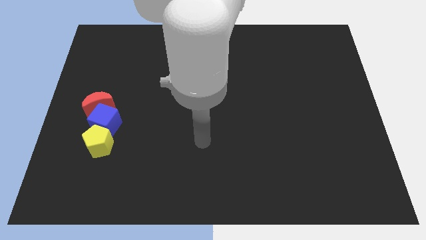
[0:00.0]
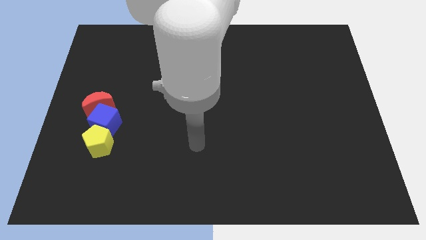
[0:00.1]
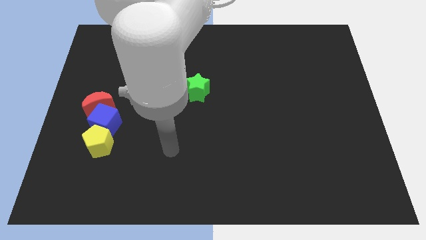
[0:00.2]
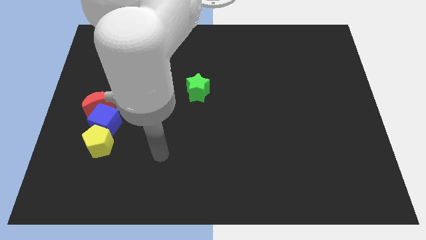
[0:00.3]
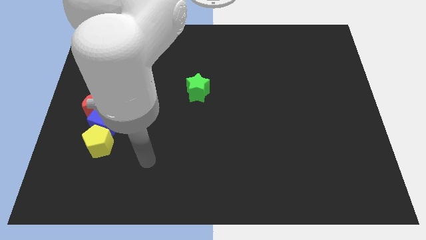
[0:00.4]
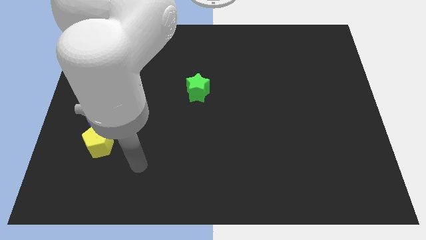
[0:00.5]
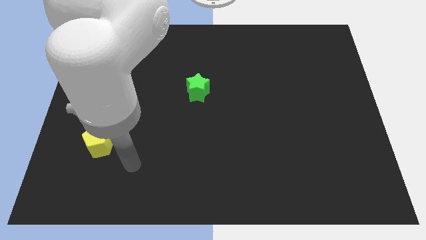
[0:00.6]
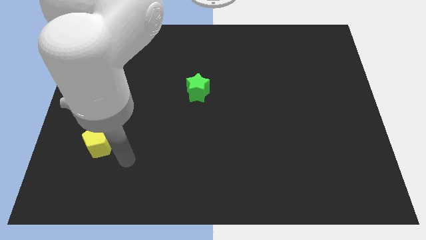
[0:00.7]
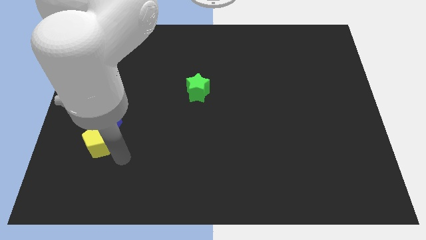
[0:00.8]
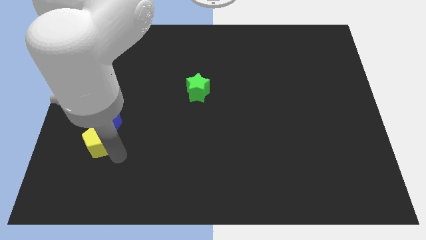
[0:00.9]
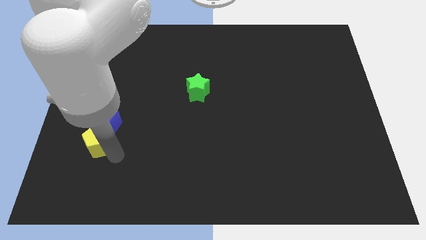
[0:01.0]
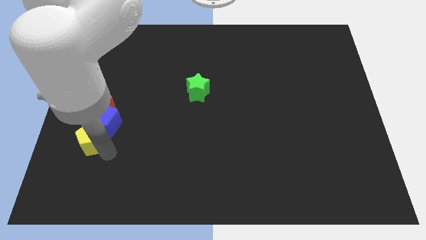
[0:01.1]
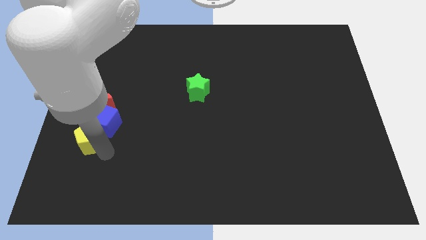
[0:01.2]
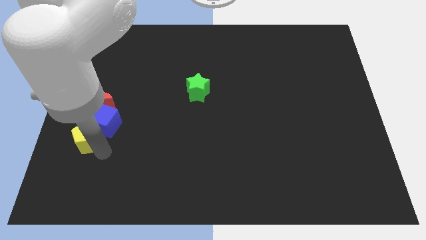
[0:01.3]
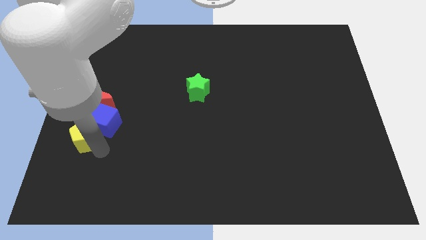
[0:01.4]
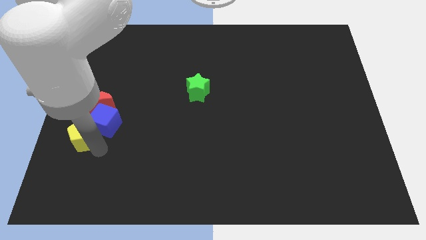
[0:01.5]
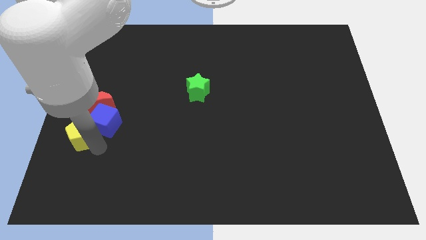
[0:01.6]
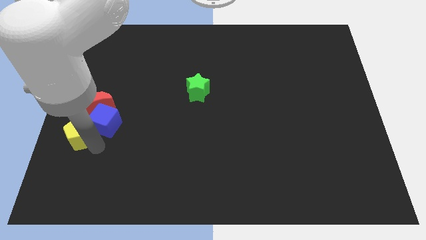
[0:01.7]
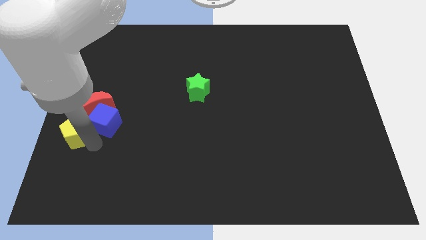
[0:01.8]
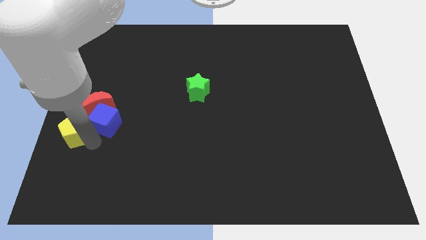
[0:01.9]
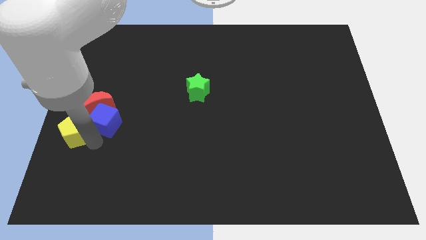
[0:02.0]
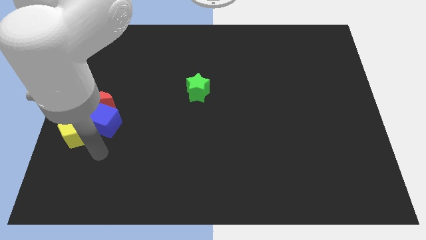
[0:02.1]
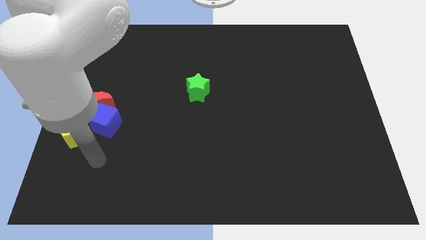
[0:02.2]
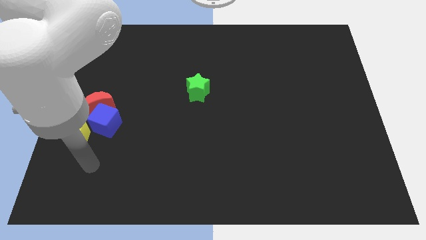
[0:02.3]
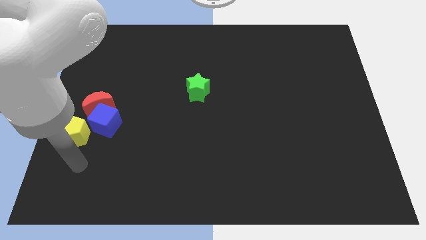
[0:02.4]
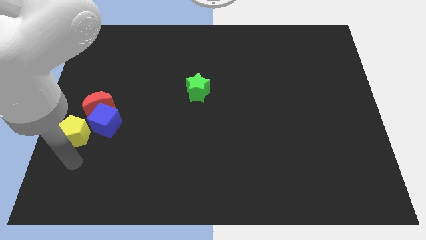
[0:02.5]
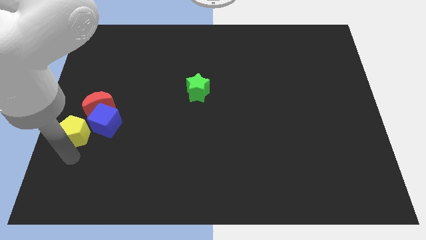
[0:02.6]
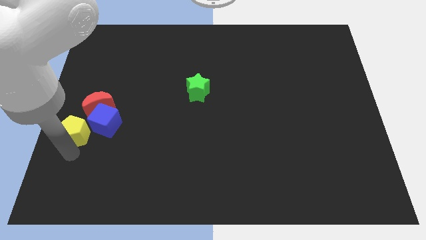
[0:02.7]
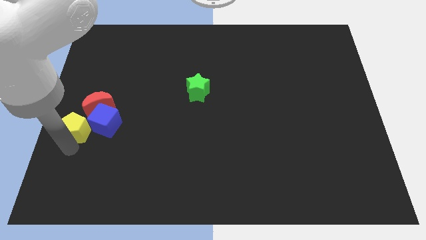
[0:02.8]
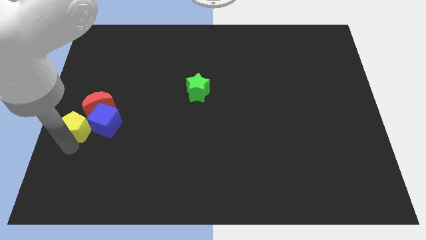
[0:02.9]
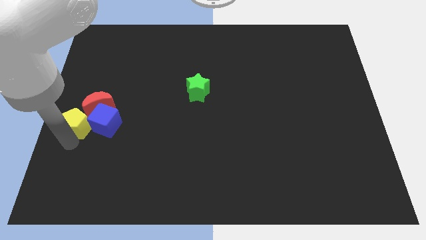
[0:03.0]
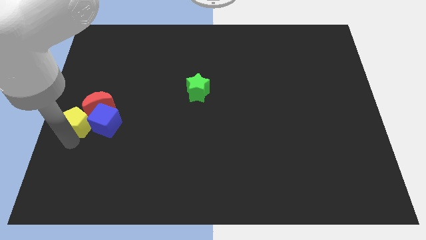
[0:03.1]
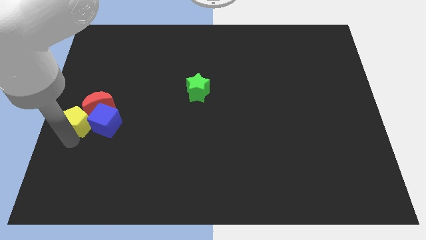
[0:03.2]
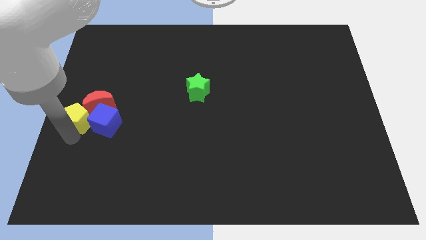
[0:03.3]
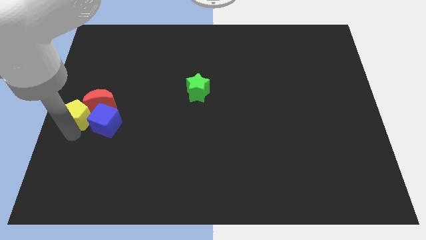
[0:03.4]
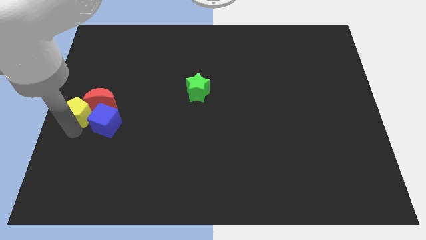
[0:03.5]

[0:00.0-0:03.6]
slide the yellow block close to the moon

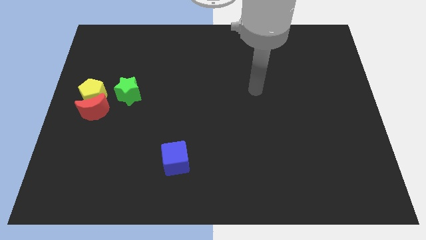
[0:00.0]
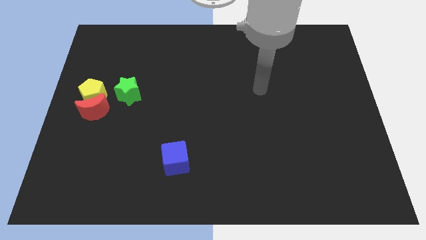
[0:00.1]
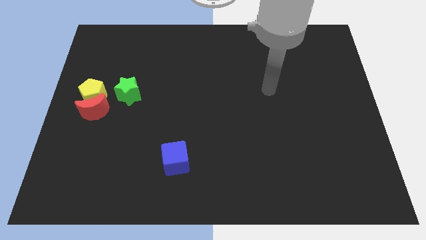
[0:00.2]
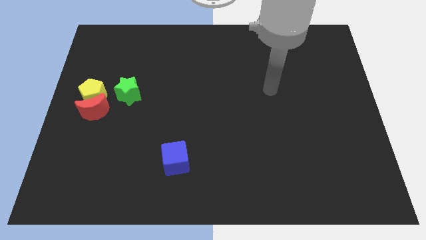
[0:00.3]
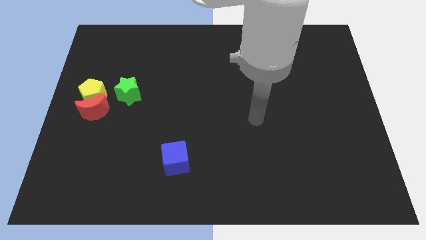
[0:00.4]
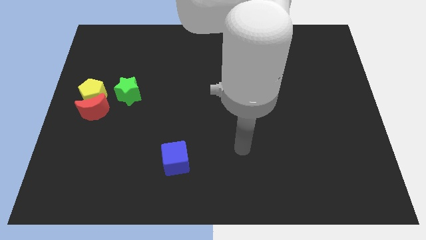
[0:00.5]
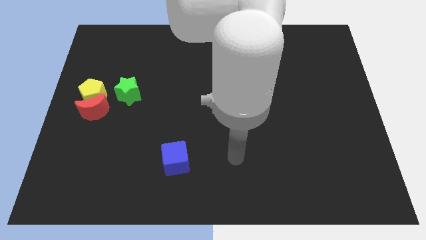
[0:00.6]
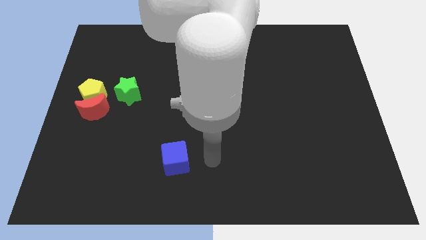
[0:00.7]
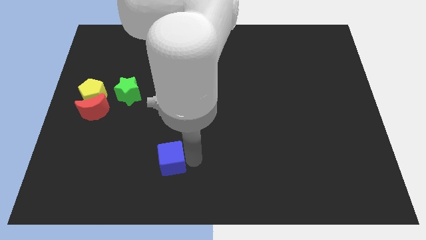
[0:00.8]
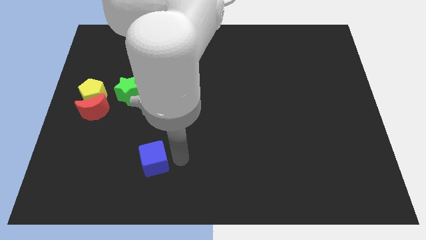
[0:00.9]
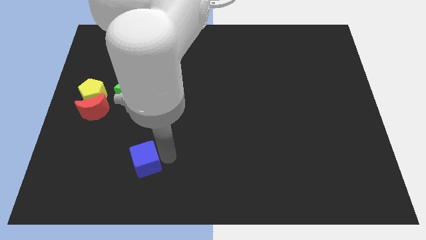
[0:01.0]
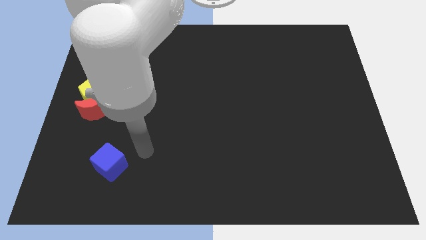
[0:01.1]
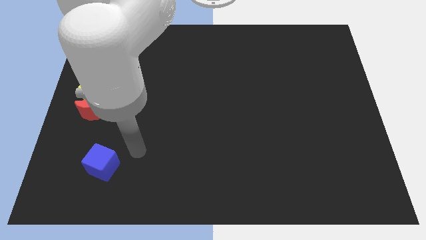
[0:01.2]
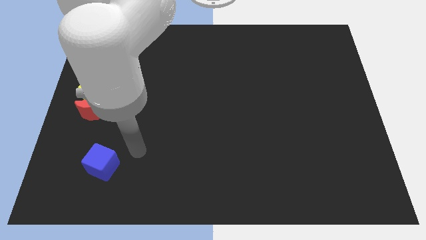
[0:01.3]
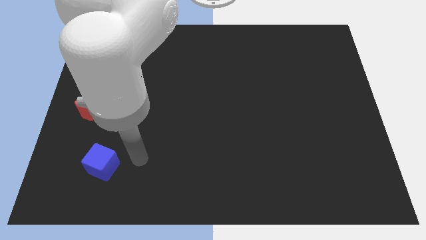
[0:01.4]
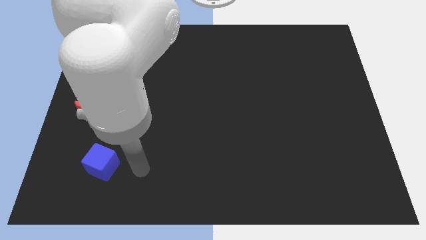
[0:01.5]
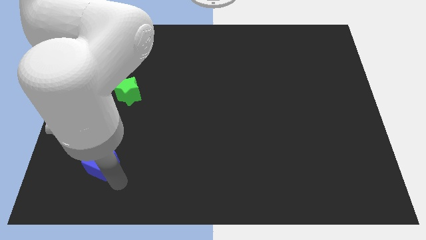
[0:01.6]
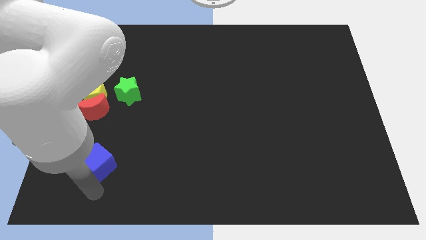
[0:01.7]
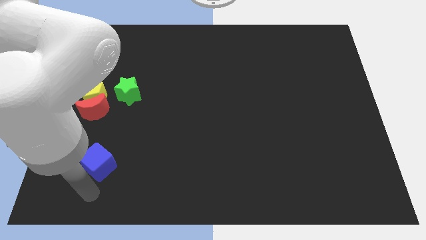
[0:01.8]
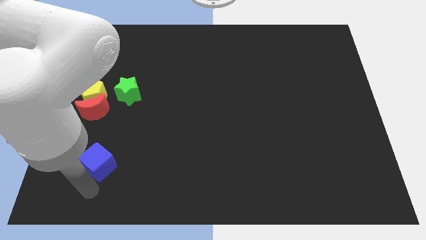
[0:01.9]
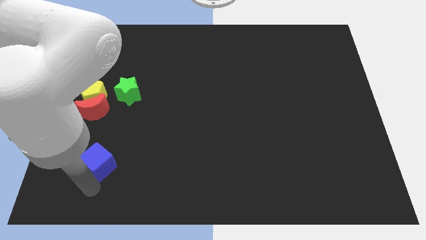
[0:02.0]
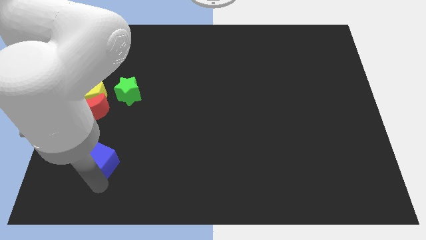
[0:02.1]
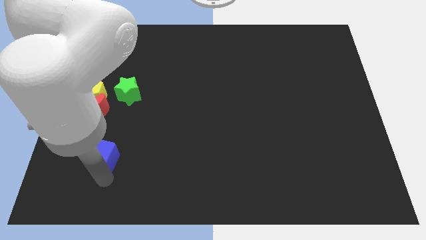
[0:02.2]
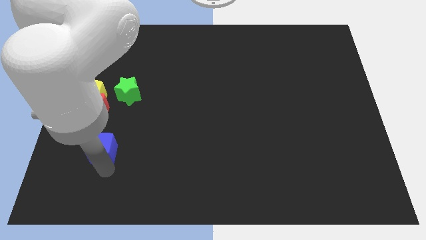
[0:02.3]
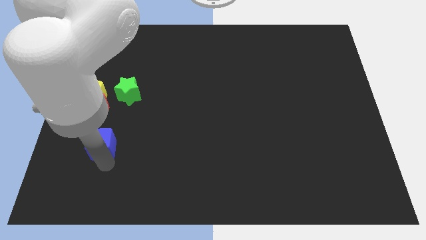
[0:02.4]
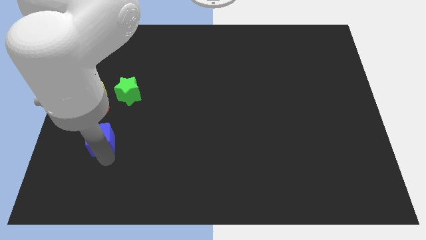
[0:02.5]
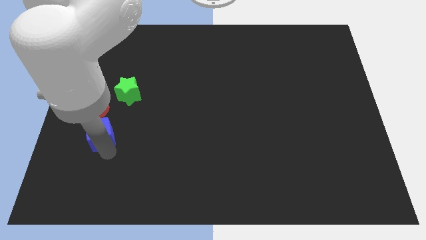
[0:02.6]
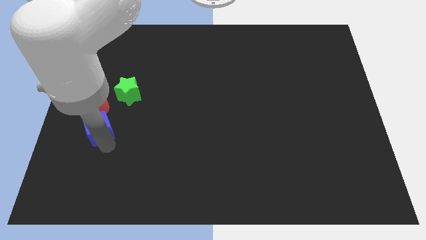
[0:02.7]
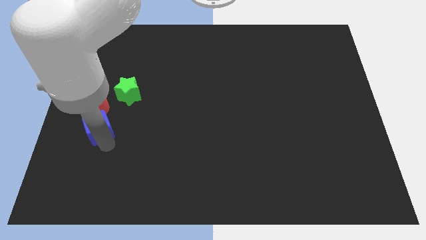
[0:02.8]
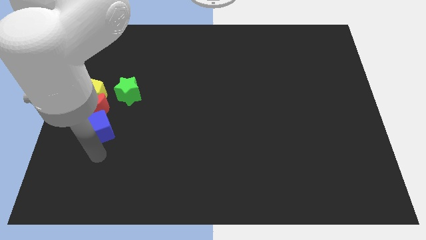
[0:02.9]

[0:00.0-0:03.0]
slide the blue cube next to the red block

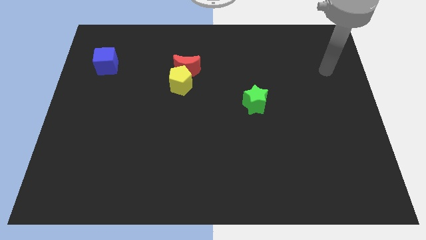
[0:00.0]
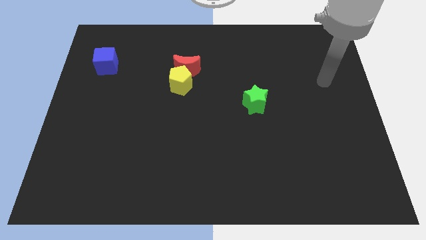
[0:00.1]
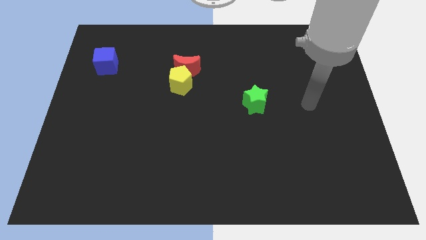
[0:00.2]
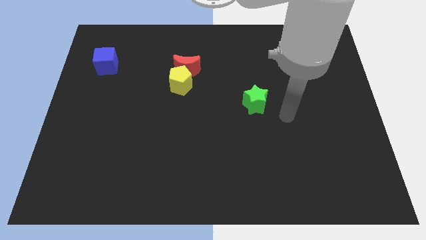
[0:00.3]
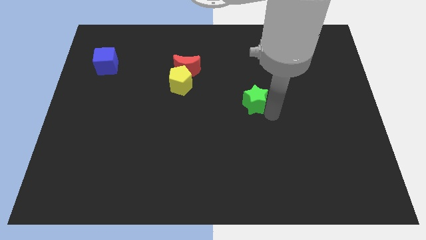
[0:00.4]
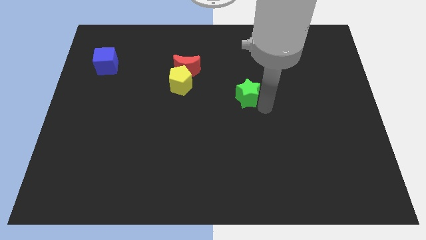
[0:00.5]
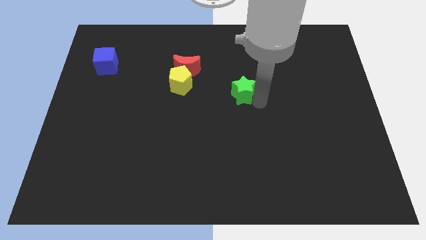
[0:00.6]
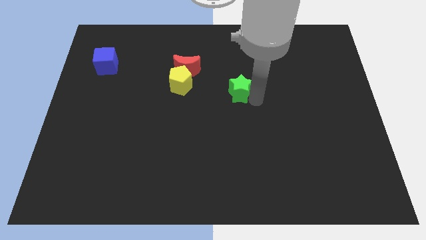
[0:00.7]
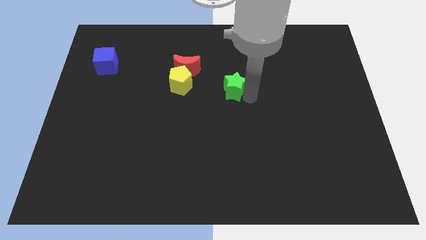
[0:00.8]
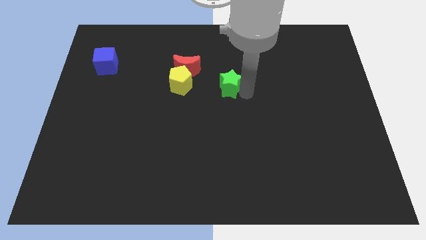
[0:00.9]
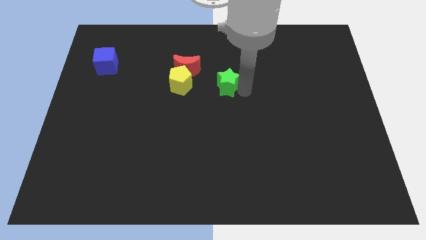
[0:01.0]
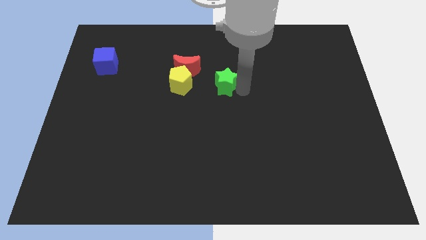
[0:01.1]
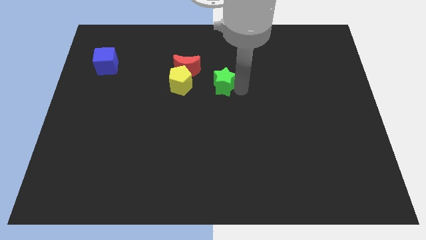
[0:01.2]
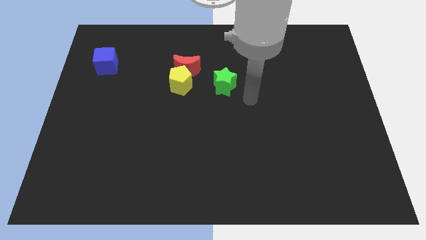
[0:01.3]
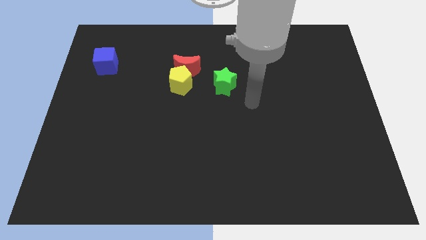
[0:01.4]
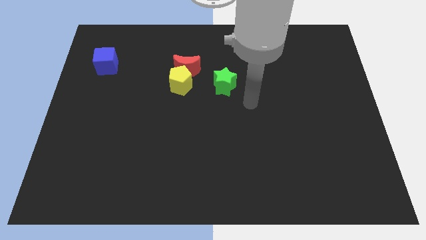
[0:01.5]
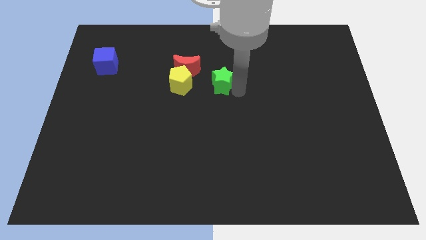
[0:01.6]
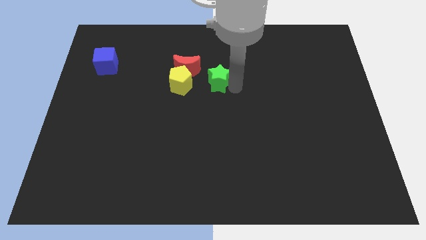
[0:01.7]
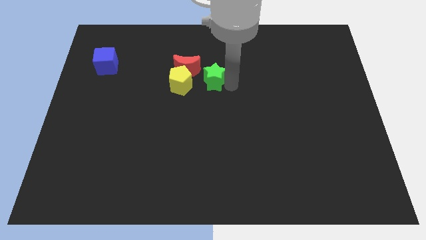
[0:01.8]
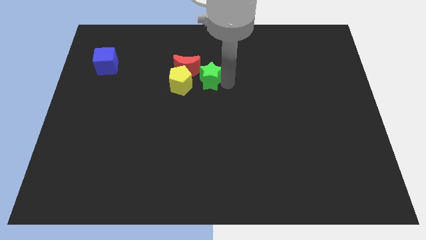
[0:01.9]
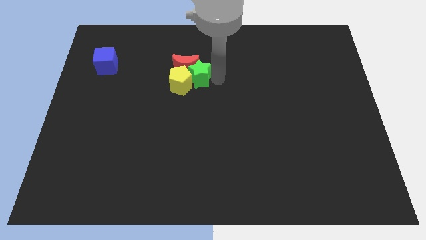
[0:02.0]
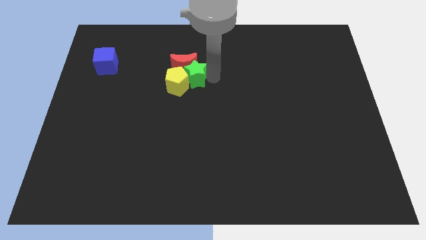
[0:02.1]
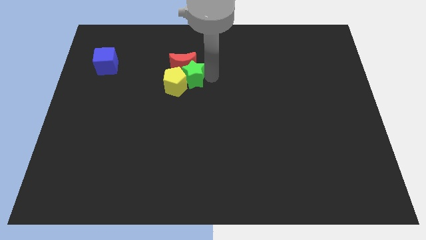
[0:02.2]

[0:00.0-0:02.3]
push the star towards the red block
